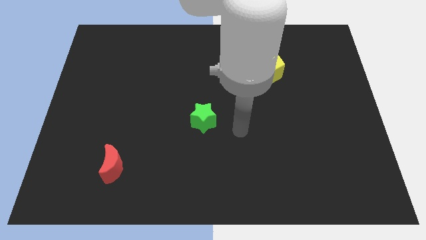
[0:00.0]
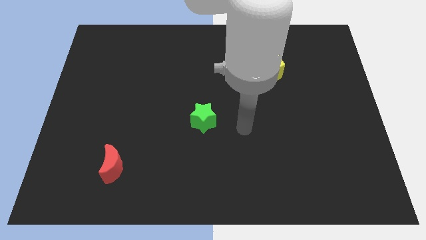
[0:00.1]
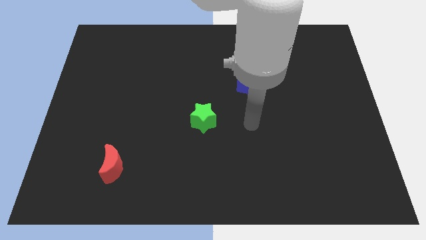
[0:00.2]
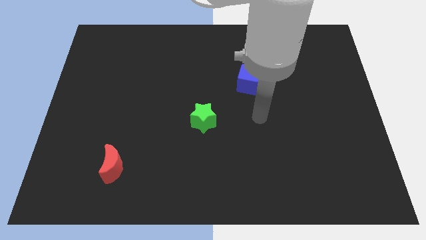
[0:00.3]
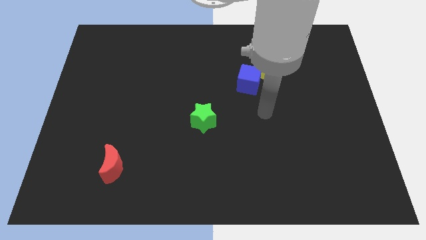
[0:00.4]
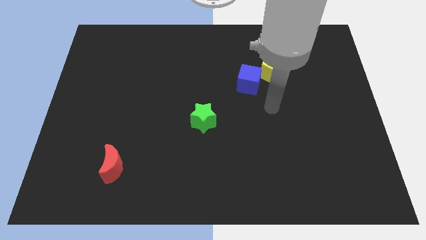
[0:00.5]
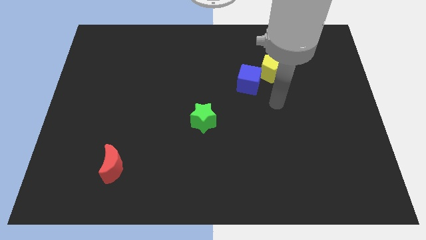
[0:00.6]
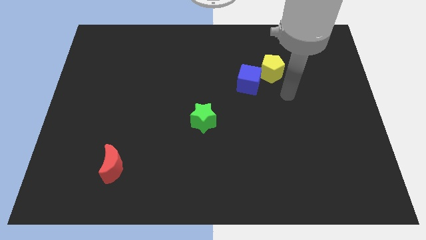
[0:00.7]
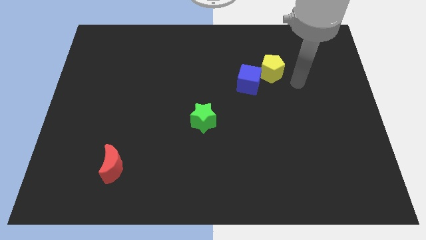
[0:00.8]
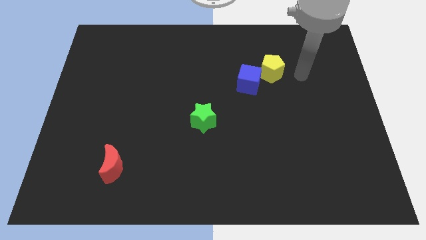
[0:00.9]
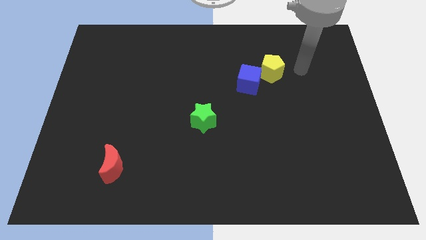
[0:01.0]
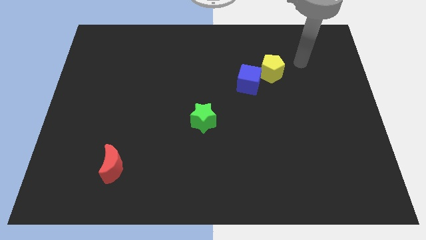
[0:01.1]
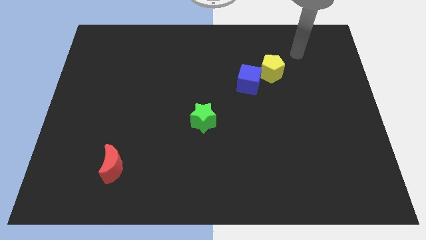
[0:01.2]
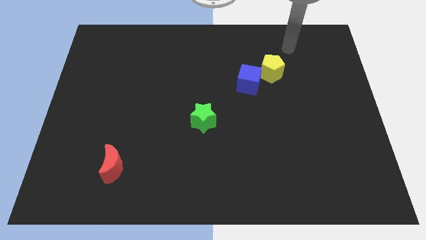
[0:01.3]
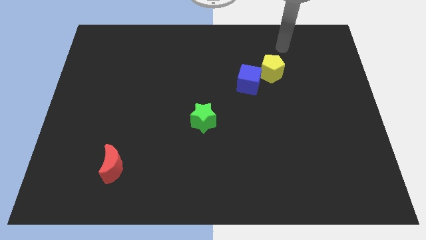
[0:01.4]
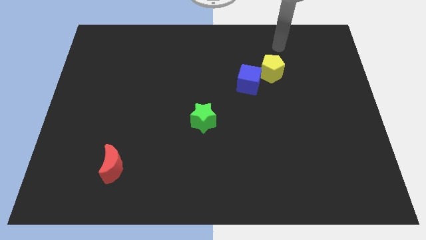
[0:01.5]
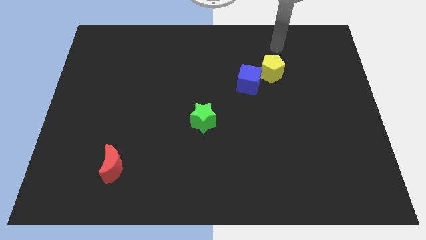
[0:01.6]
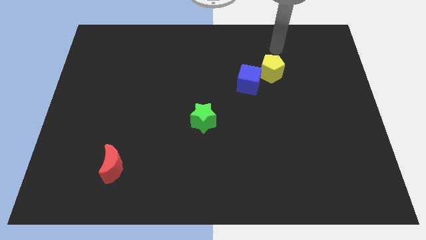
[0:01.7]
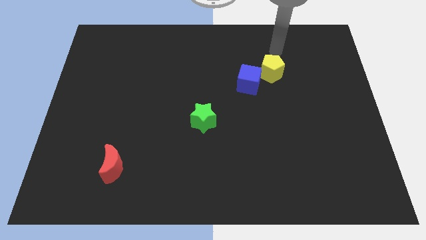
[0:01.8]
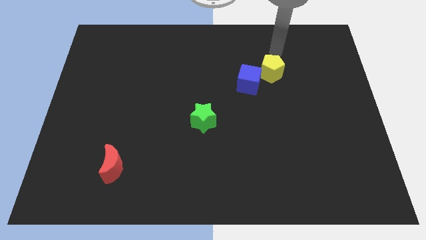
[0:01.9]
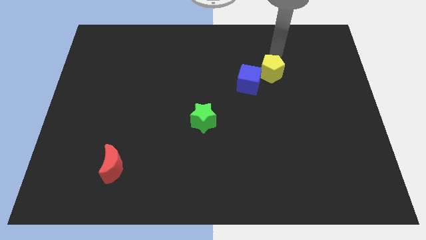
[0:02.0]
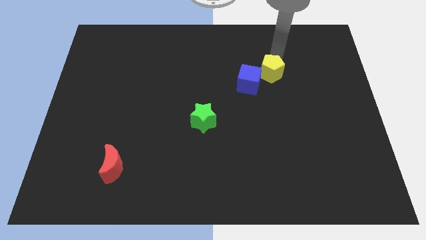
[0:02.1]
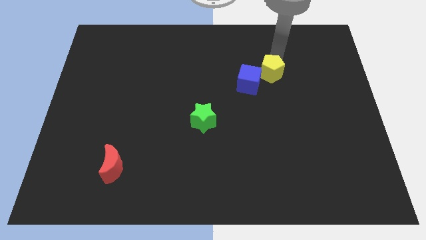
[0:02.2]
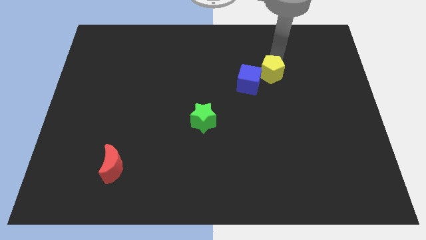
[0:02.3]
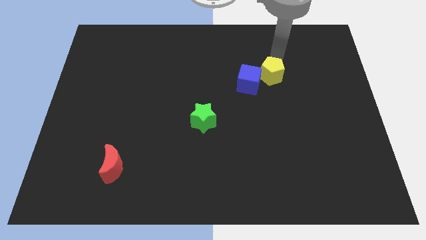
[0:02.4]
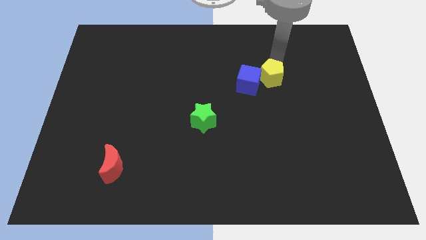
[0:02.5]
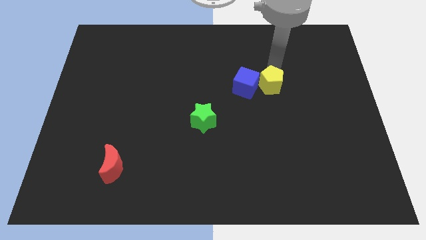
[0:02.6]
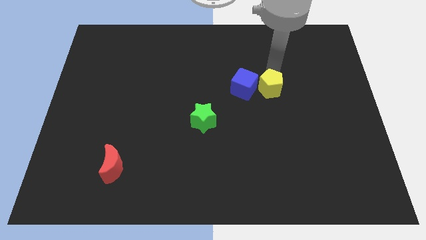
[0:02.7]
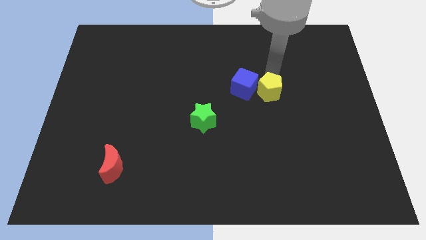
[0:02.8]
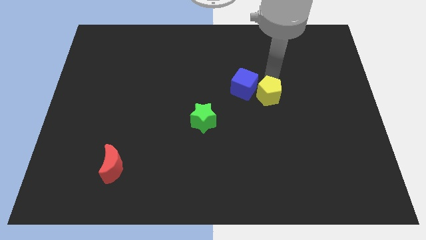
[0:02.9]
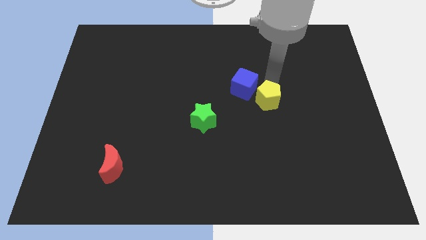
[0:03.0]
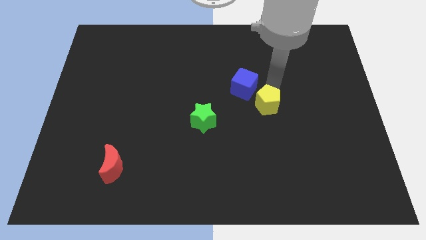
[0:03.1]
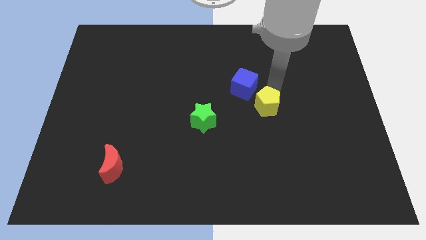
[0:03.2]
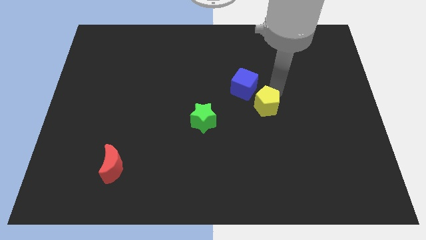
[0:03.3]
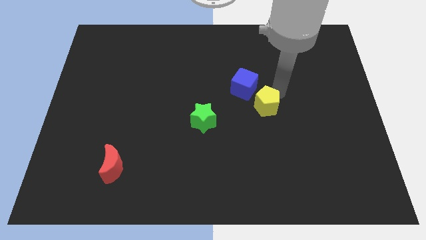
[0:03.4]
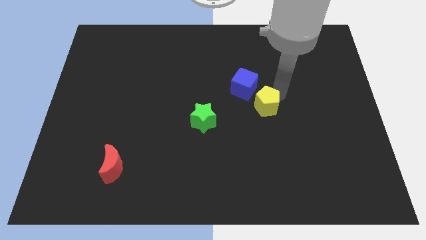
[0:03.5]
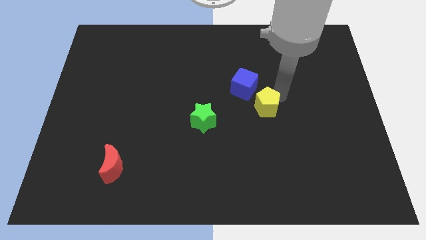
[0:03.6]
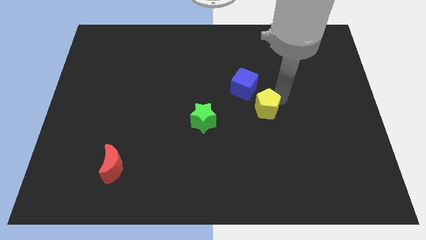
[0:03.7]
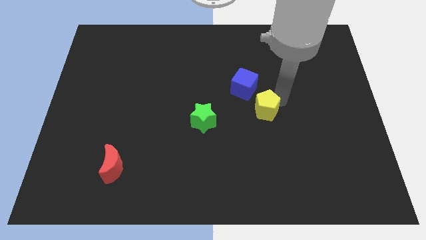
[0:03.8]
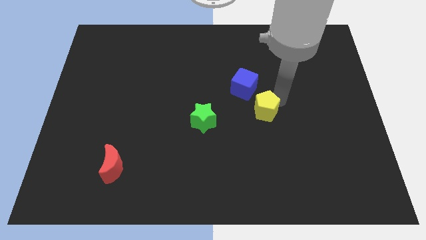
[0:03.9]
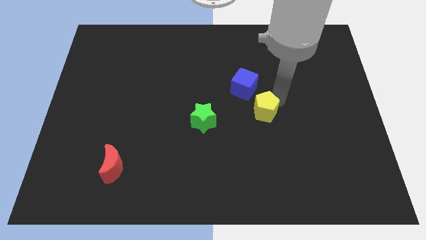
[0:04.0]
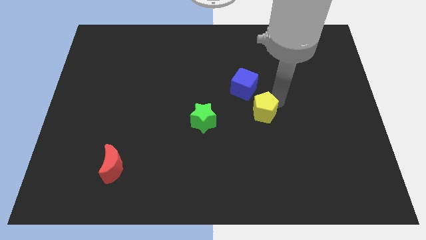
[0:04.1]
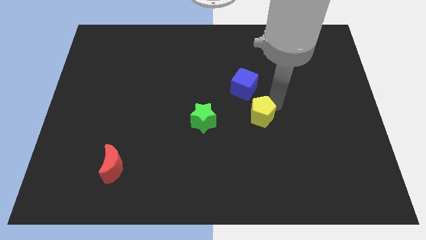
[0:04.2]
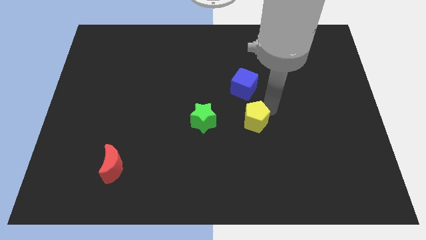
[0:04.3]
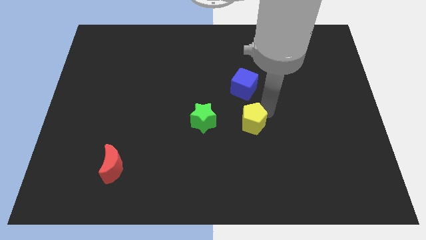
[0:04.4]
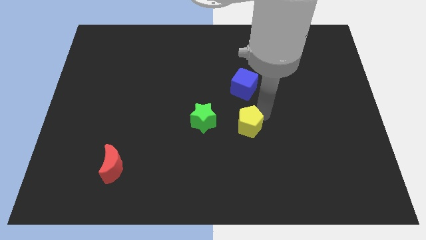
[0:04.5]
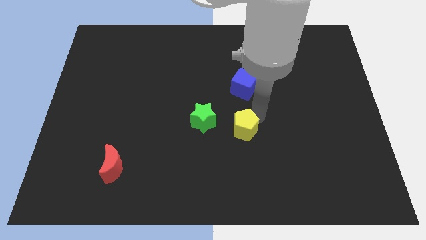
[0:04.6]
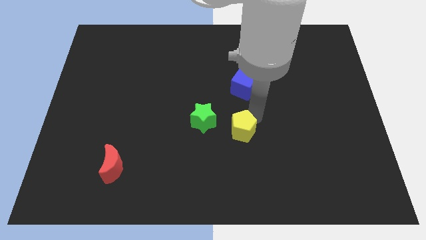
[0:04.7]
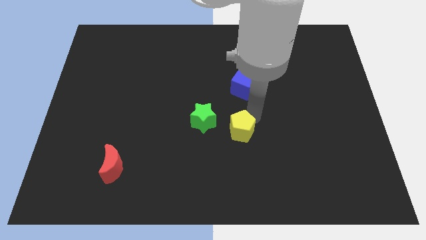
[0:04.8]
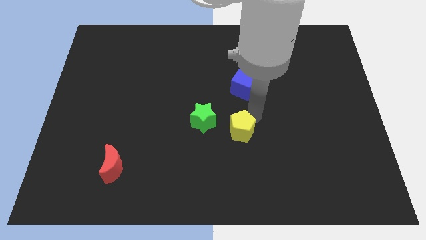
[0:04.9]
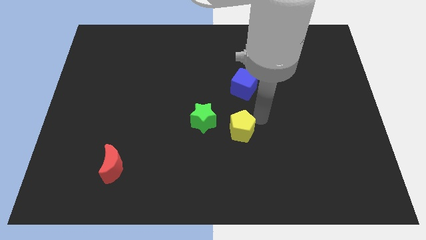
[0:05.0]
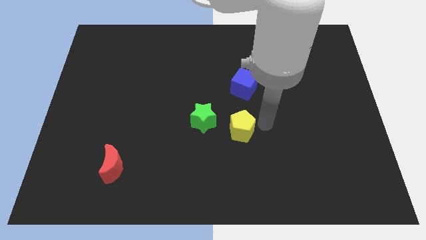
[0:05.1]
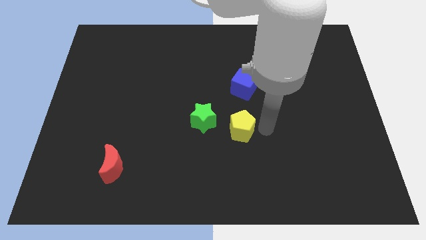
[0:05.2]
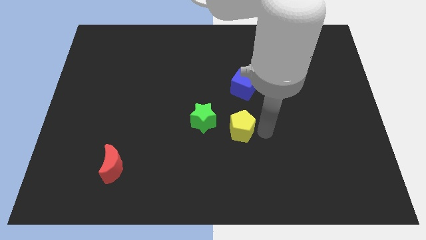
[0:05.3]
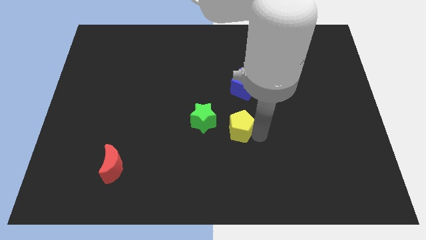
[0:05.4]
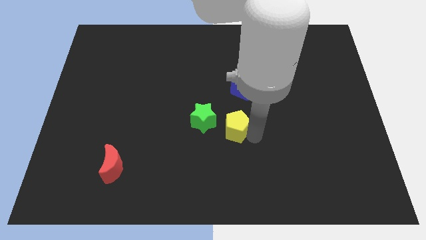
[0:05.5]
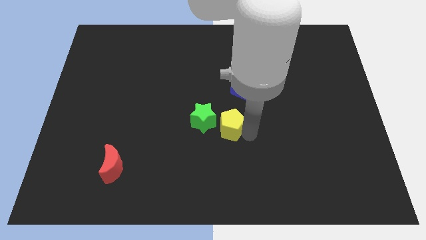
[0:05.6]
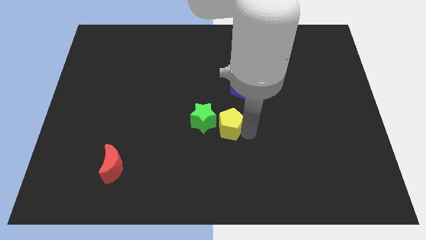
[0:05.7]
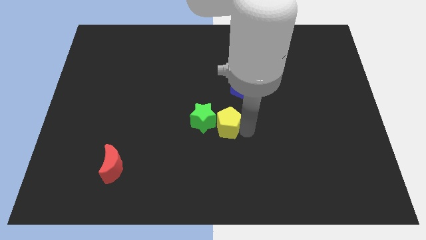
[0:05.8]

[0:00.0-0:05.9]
put the pentagon to the green block

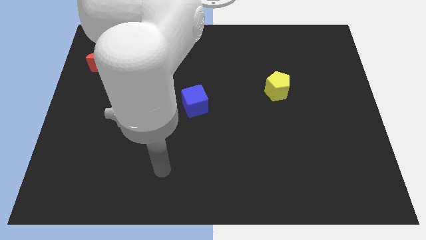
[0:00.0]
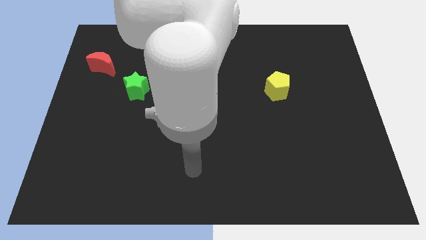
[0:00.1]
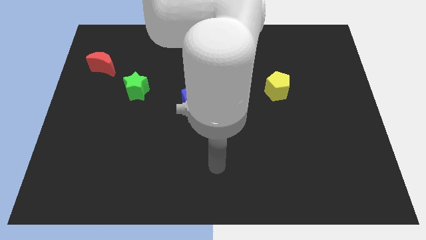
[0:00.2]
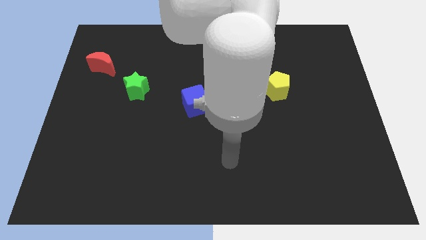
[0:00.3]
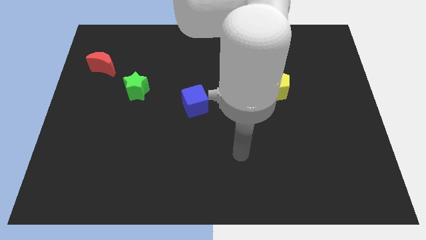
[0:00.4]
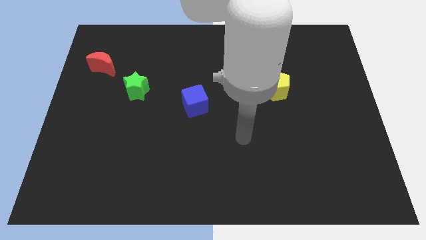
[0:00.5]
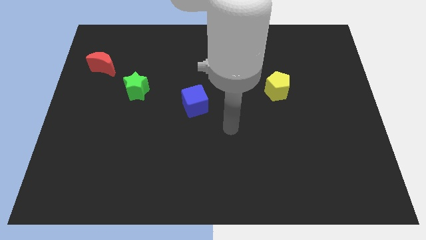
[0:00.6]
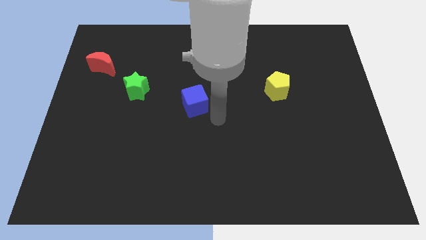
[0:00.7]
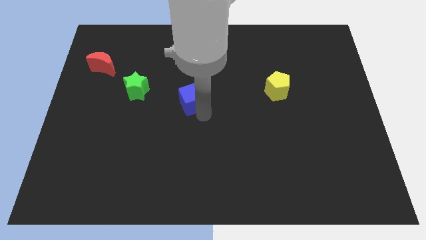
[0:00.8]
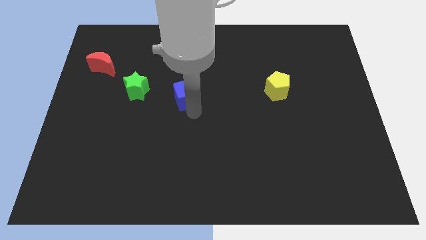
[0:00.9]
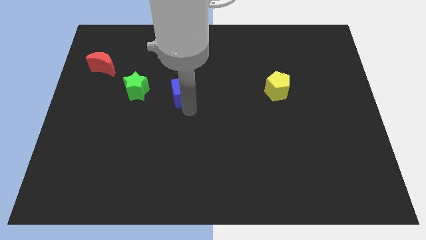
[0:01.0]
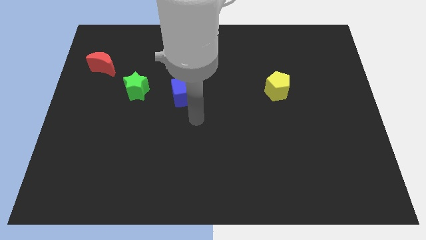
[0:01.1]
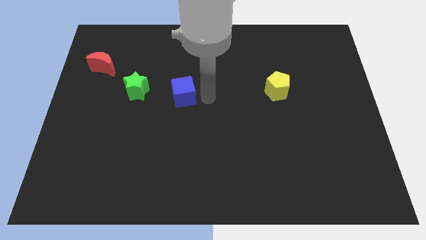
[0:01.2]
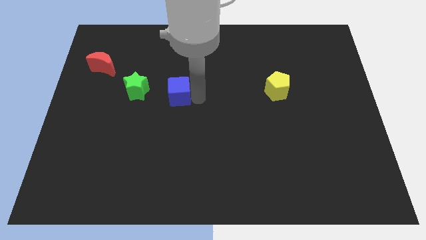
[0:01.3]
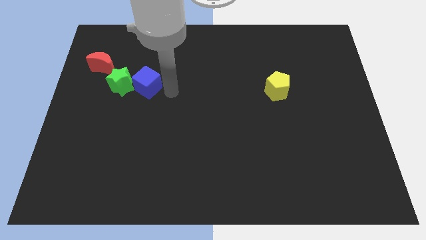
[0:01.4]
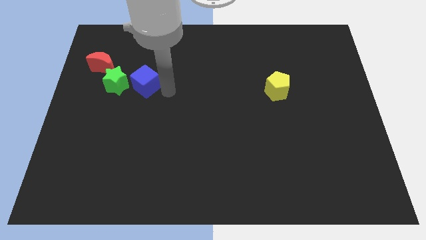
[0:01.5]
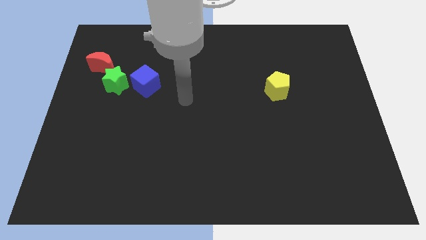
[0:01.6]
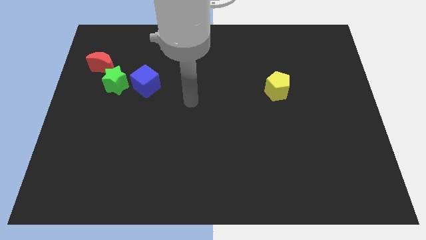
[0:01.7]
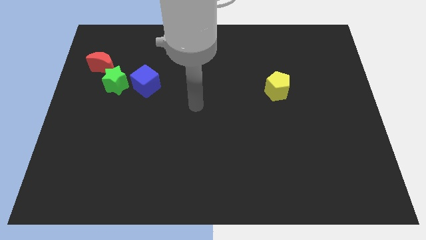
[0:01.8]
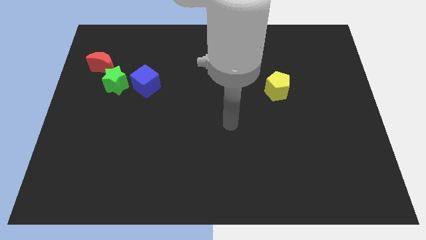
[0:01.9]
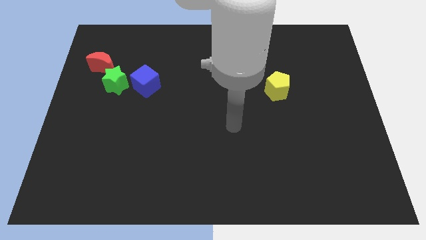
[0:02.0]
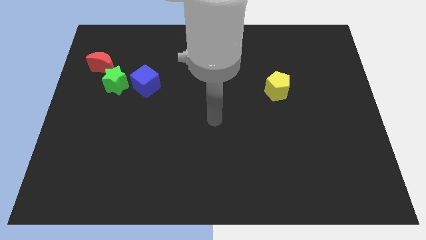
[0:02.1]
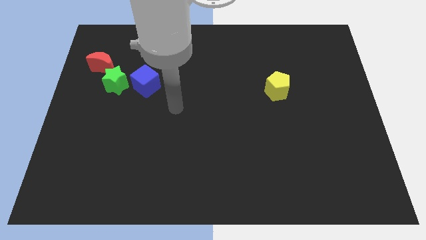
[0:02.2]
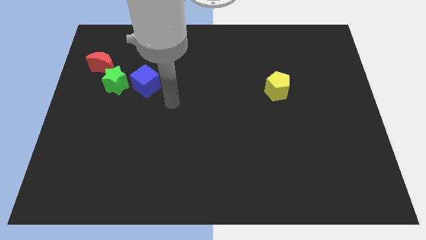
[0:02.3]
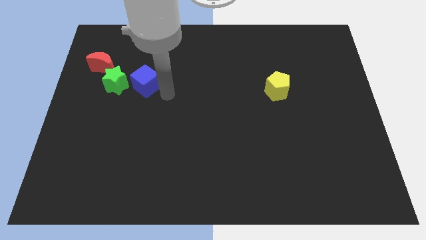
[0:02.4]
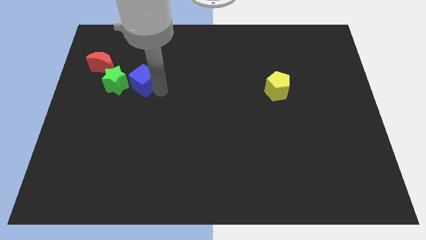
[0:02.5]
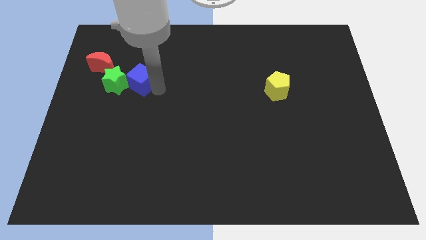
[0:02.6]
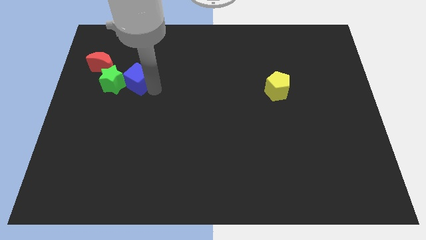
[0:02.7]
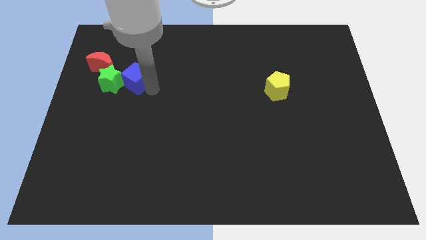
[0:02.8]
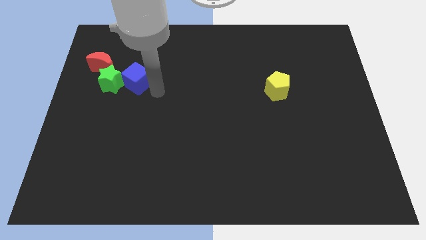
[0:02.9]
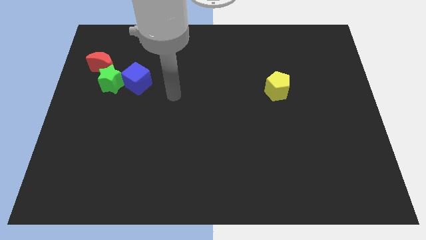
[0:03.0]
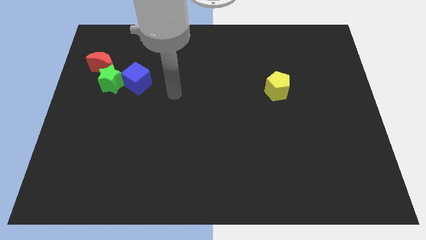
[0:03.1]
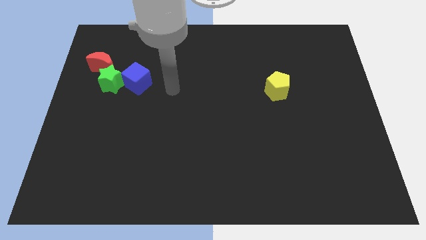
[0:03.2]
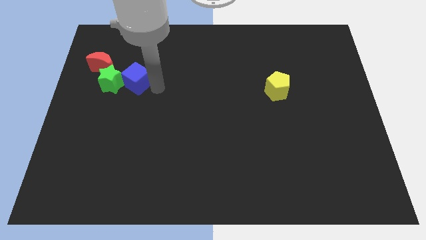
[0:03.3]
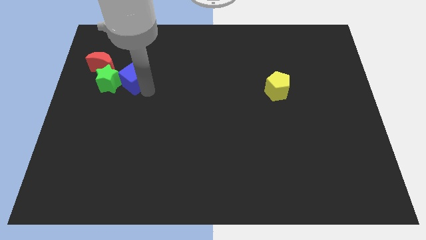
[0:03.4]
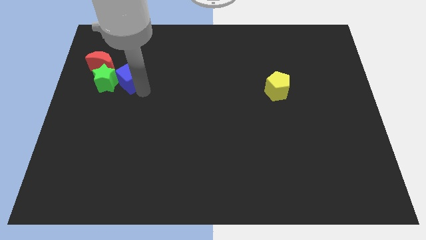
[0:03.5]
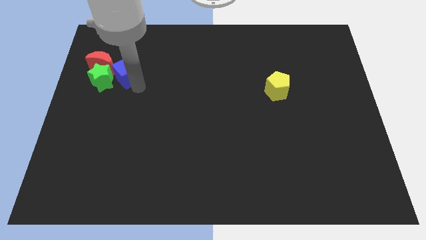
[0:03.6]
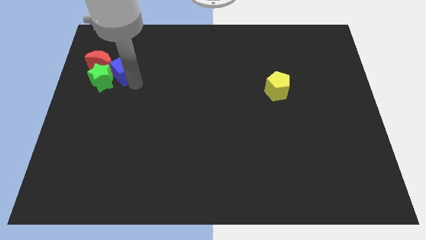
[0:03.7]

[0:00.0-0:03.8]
slide the cube towards the green block
